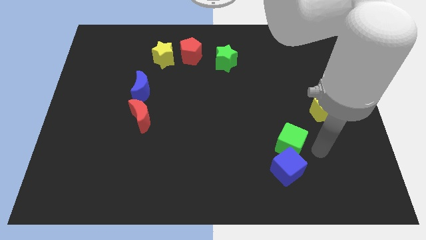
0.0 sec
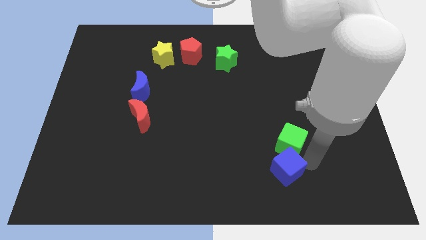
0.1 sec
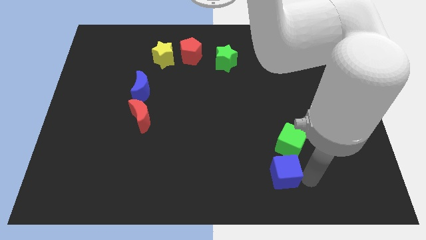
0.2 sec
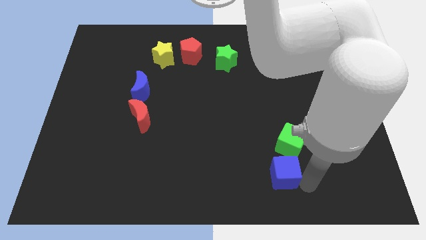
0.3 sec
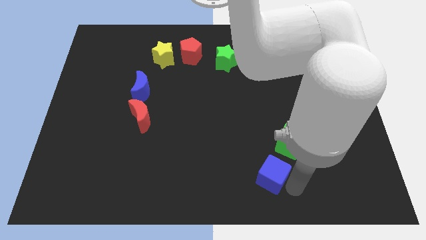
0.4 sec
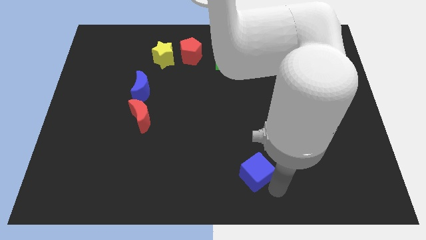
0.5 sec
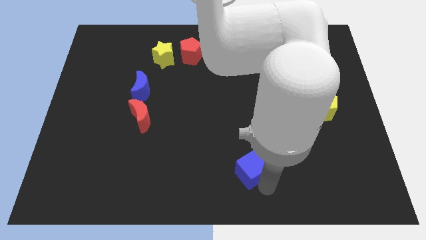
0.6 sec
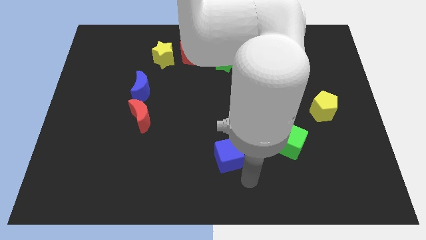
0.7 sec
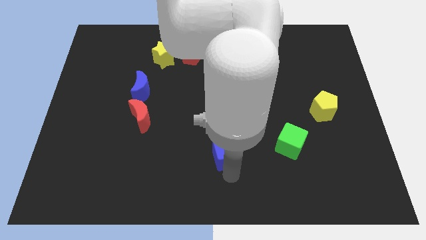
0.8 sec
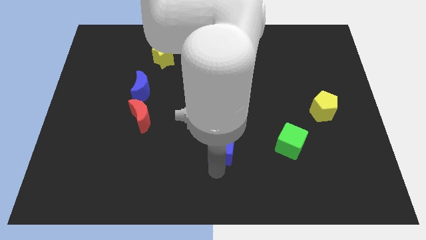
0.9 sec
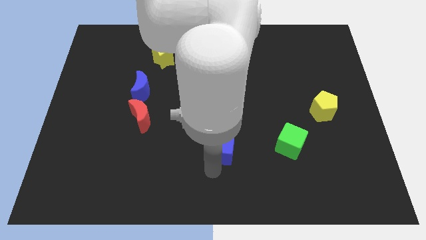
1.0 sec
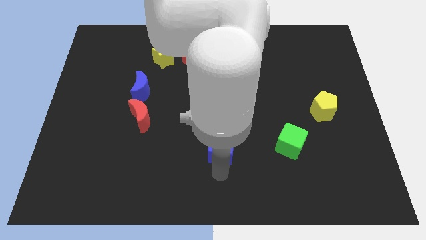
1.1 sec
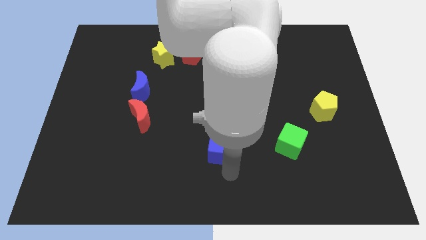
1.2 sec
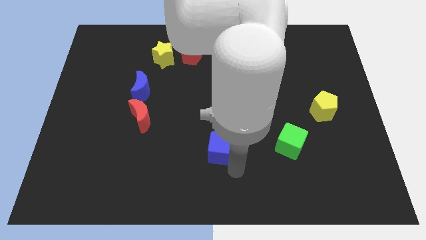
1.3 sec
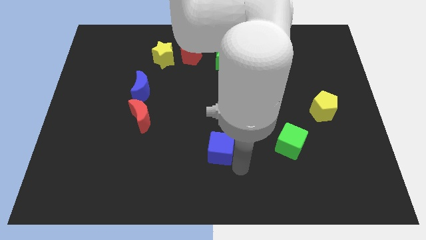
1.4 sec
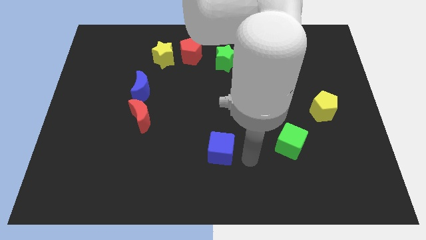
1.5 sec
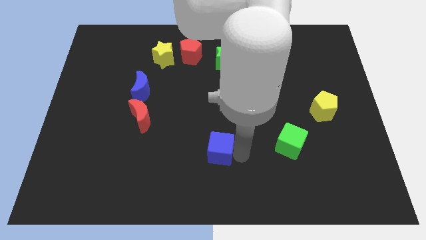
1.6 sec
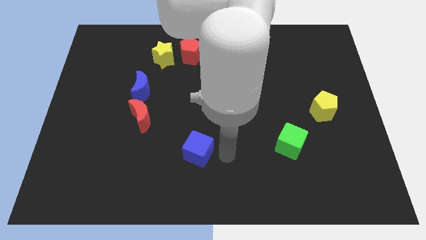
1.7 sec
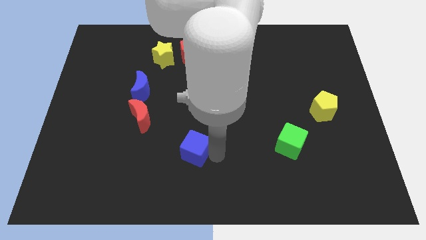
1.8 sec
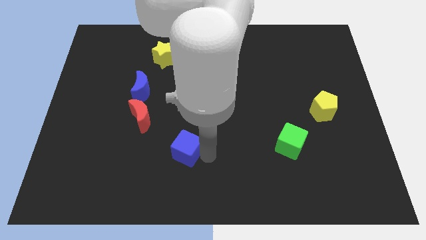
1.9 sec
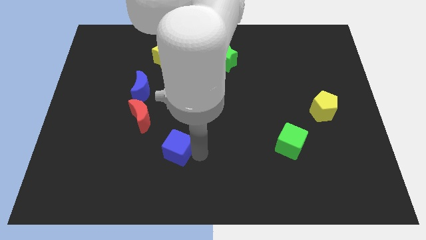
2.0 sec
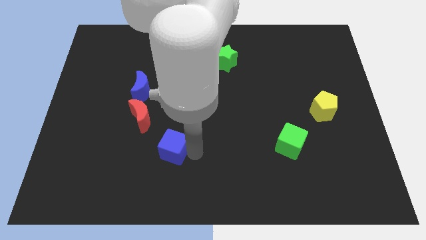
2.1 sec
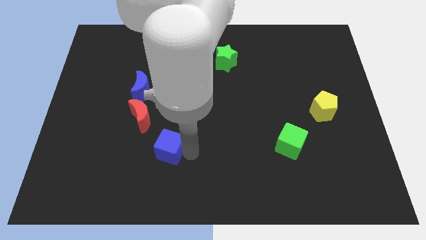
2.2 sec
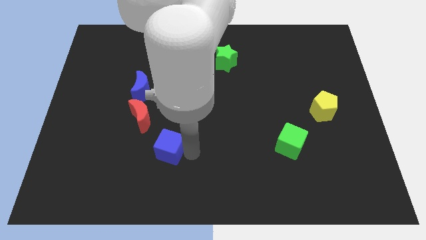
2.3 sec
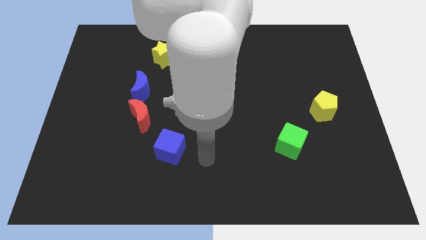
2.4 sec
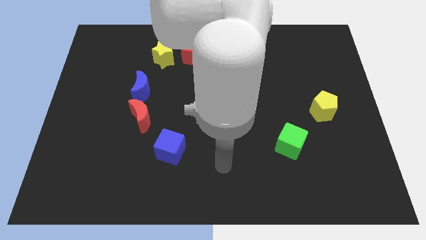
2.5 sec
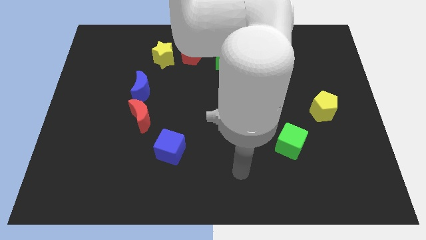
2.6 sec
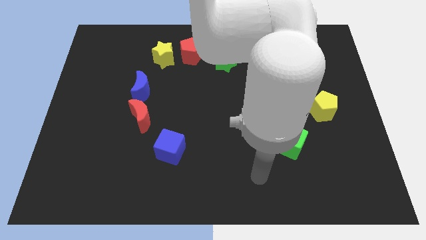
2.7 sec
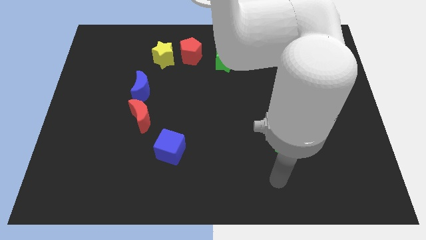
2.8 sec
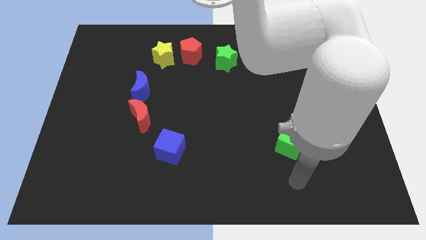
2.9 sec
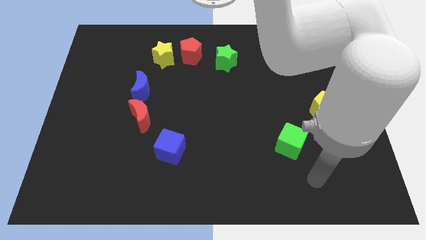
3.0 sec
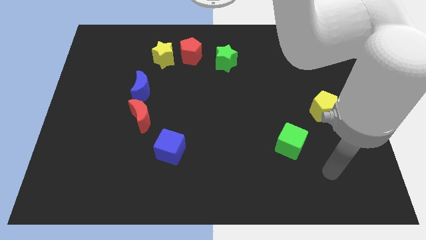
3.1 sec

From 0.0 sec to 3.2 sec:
slide the blue cube slightly to the left

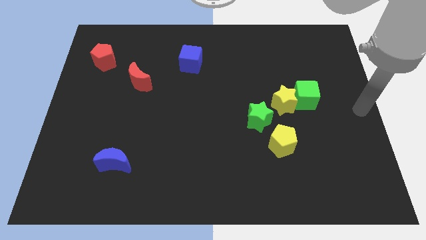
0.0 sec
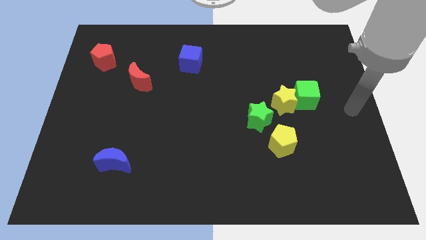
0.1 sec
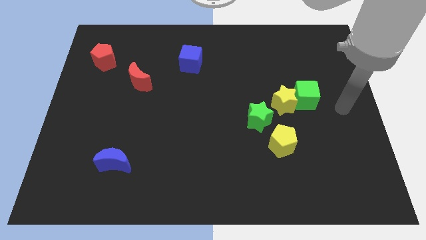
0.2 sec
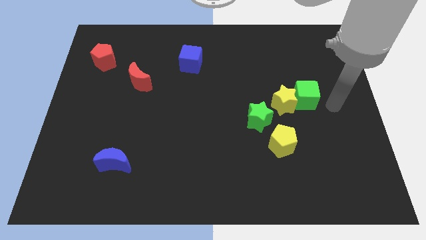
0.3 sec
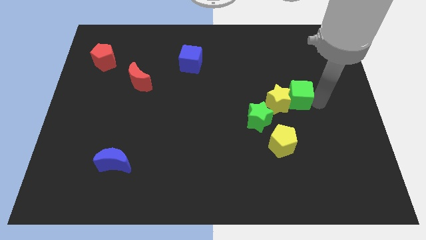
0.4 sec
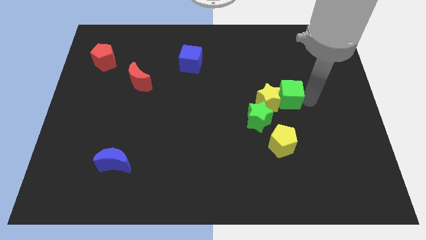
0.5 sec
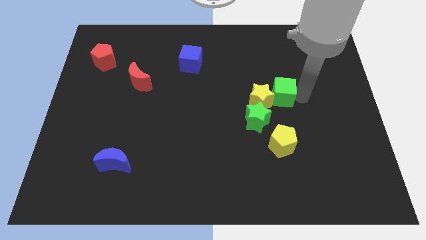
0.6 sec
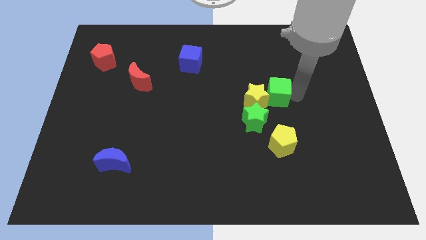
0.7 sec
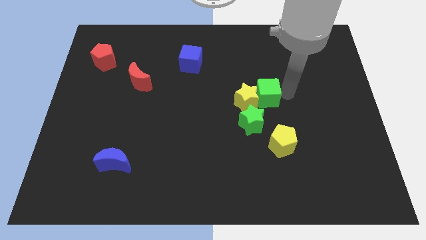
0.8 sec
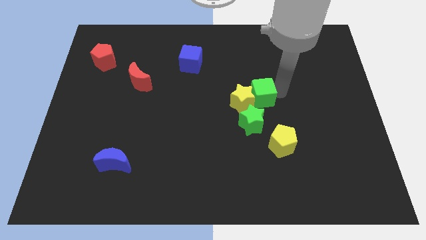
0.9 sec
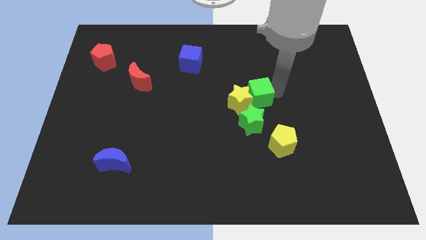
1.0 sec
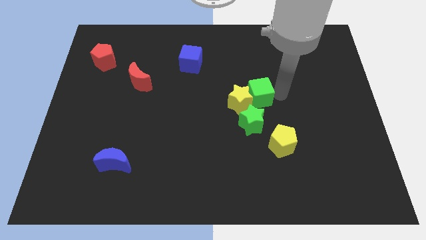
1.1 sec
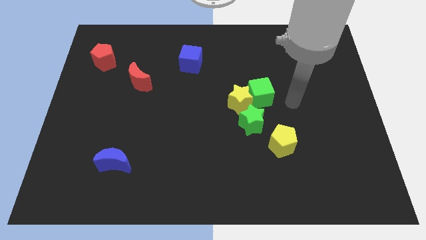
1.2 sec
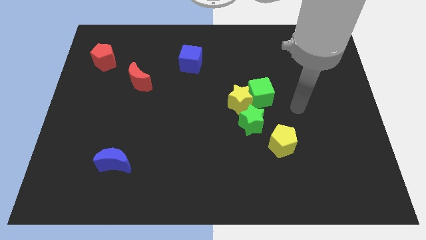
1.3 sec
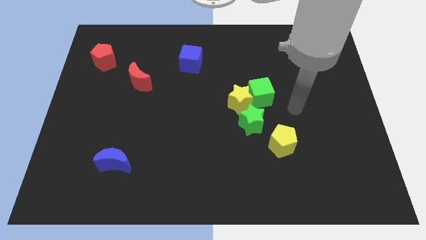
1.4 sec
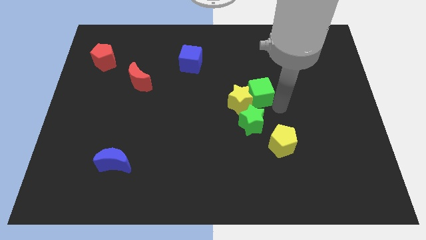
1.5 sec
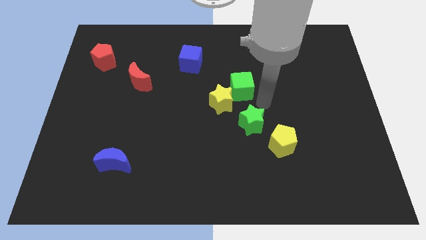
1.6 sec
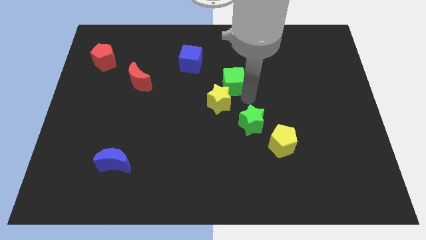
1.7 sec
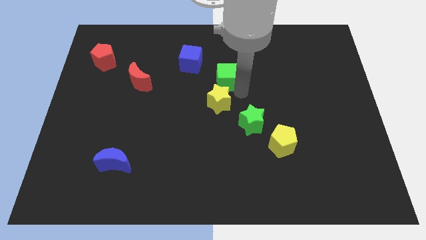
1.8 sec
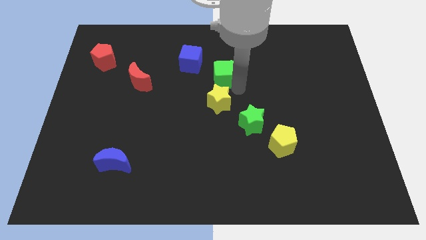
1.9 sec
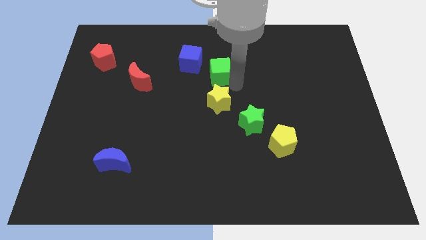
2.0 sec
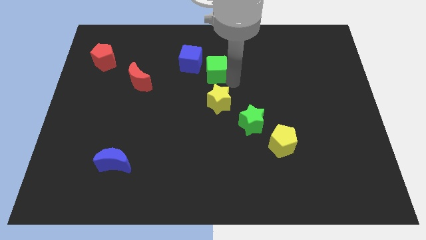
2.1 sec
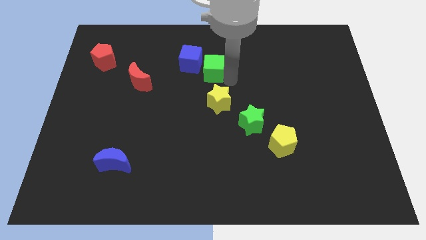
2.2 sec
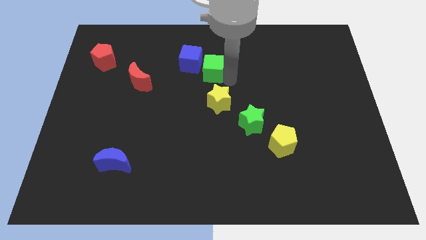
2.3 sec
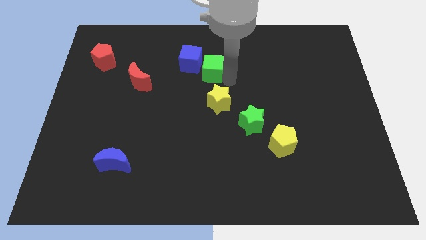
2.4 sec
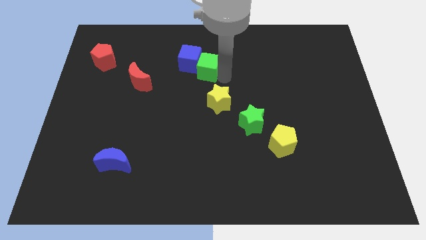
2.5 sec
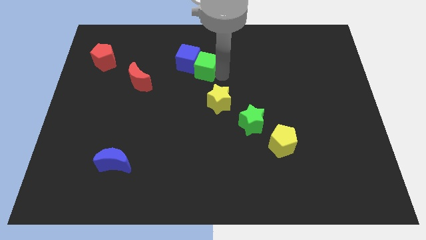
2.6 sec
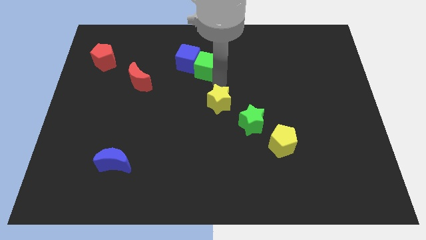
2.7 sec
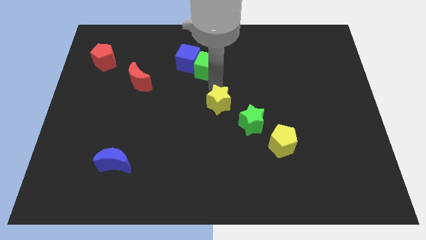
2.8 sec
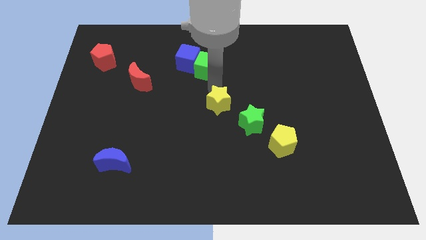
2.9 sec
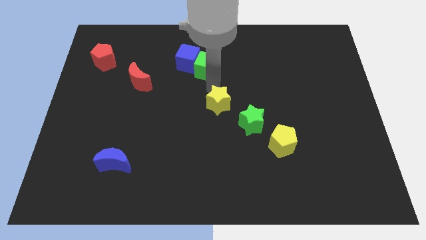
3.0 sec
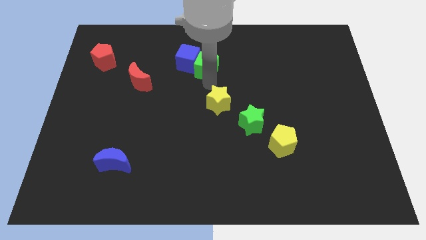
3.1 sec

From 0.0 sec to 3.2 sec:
push the green cube towards the blue cube

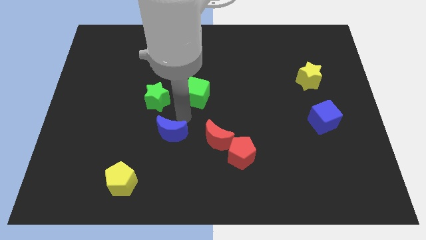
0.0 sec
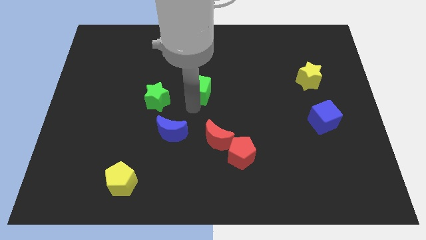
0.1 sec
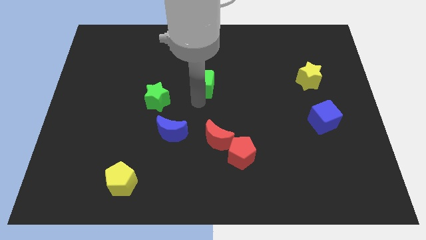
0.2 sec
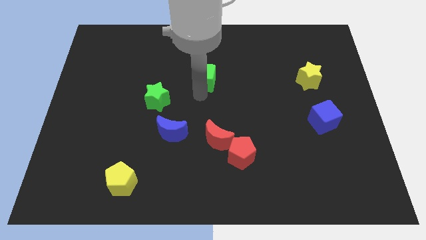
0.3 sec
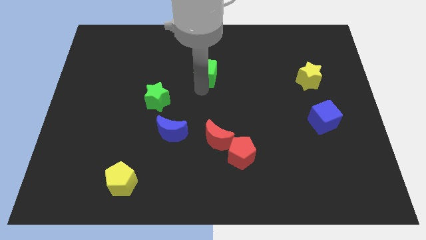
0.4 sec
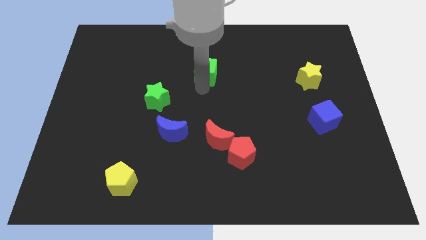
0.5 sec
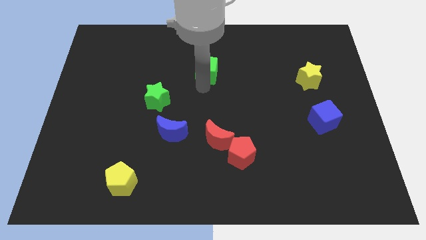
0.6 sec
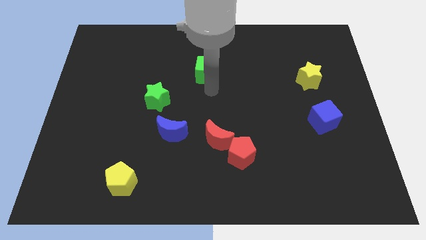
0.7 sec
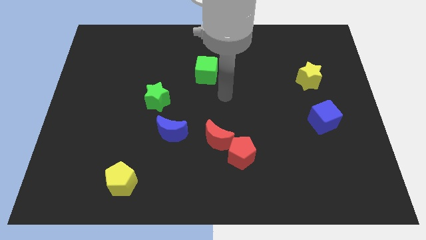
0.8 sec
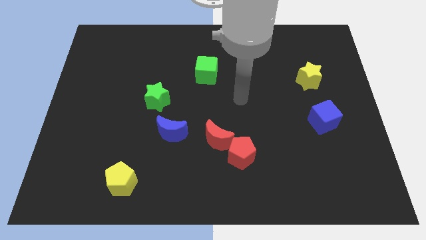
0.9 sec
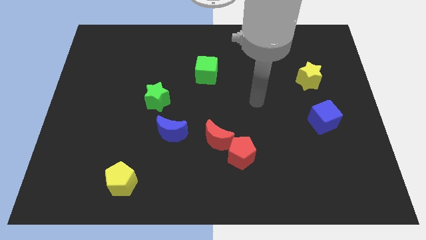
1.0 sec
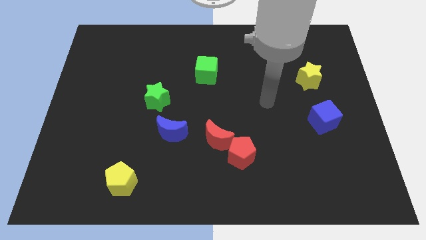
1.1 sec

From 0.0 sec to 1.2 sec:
move the green cube diagonally right of the green star

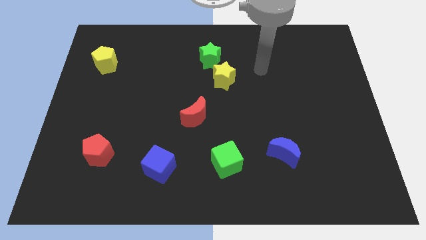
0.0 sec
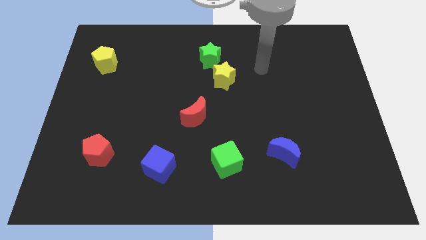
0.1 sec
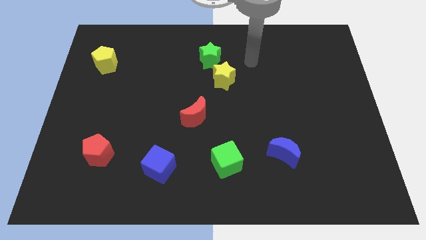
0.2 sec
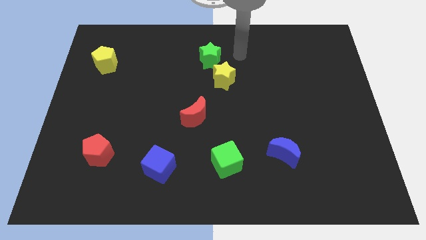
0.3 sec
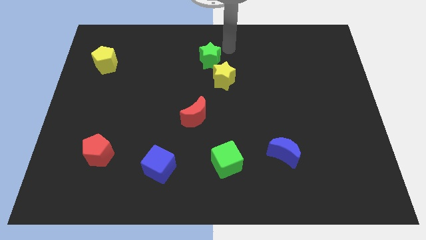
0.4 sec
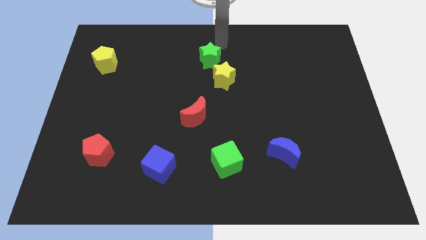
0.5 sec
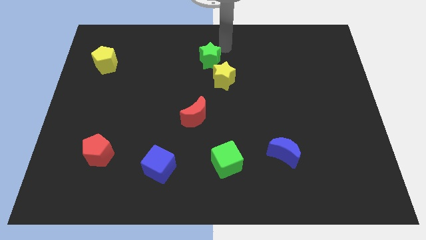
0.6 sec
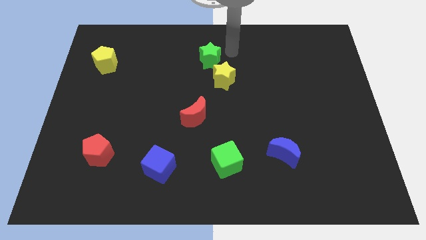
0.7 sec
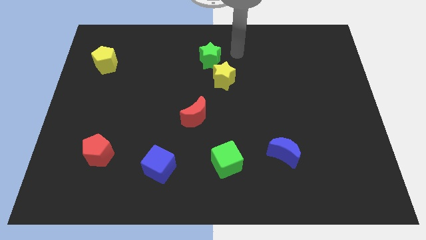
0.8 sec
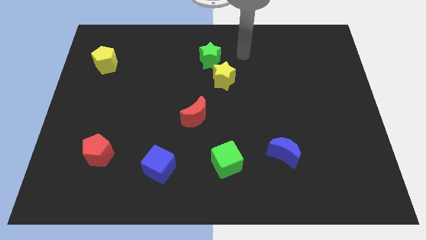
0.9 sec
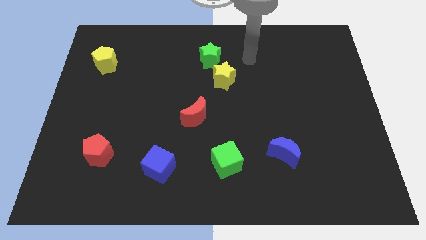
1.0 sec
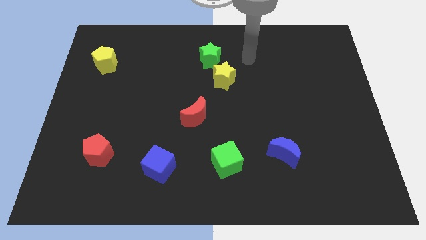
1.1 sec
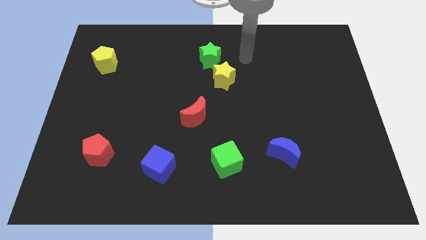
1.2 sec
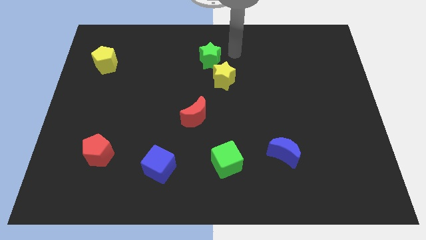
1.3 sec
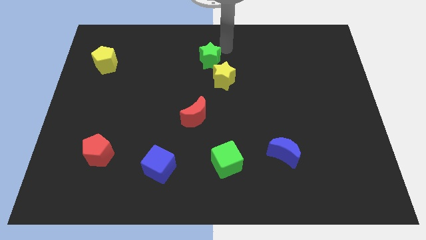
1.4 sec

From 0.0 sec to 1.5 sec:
move your arm towards the green star
